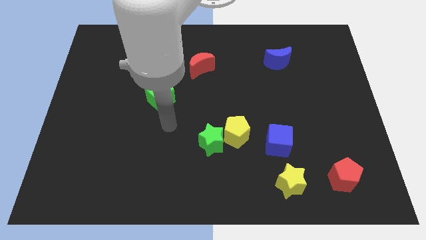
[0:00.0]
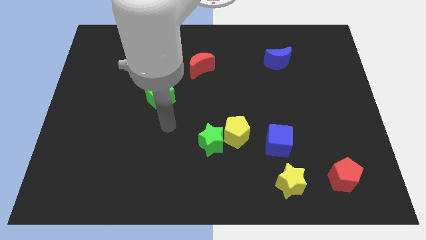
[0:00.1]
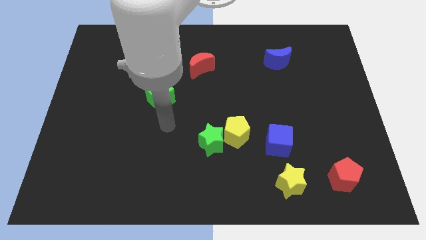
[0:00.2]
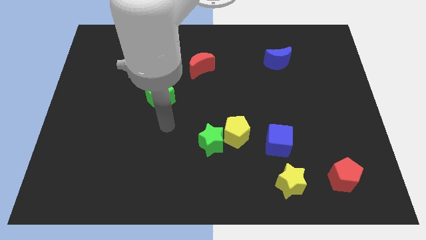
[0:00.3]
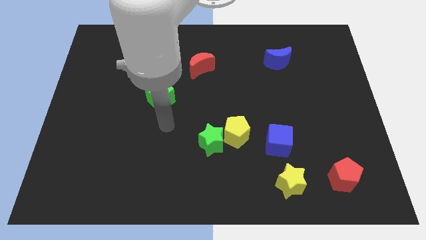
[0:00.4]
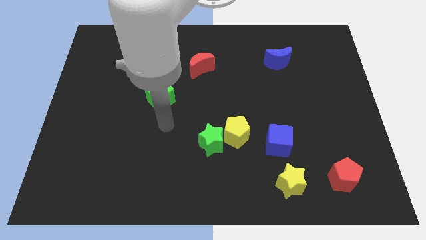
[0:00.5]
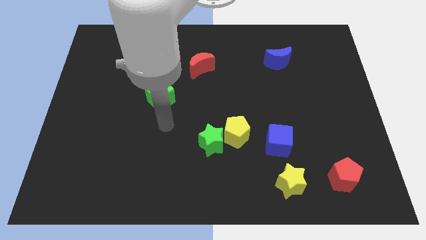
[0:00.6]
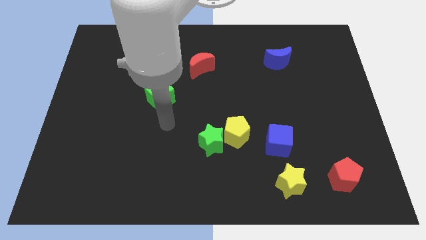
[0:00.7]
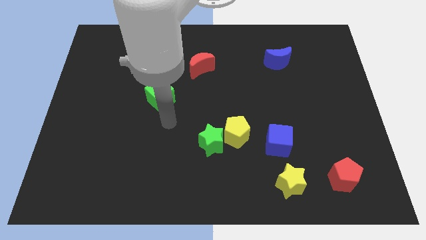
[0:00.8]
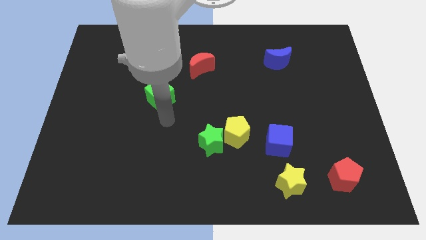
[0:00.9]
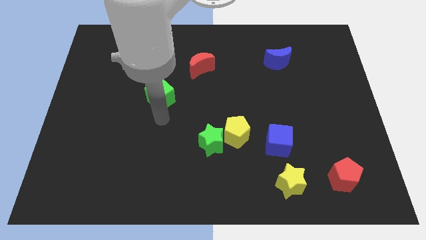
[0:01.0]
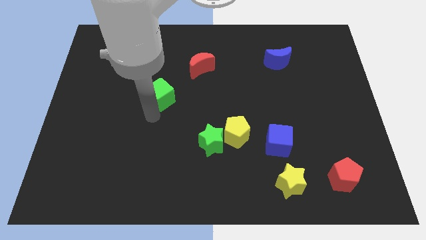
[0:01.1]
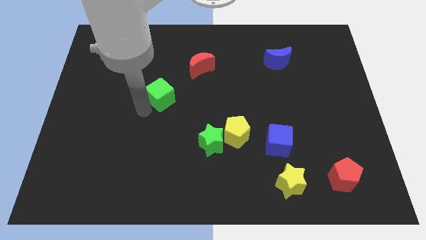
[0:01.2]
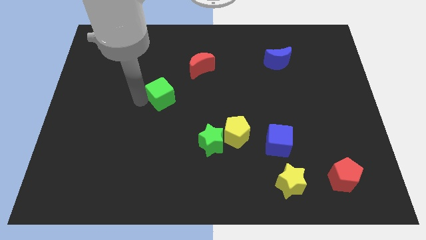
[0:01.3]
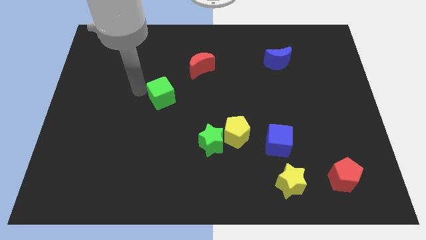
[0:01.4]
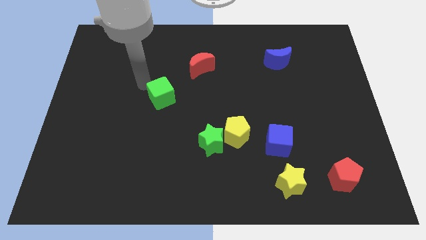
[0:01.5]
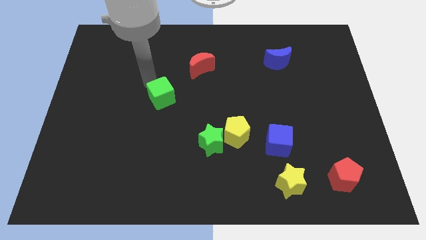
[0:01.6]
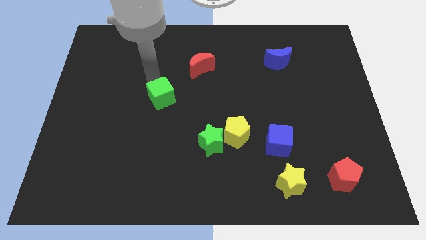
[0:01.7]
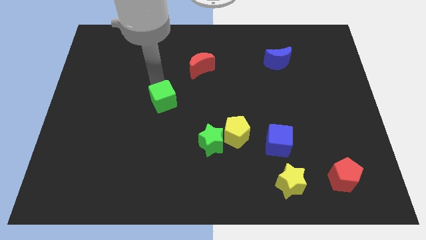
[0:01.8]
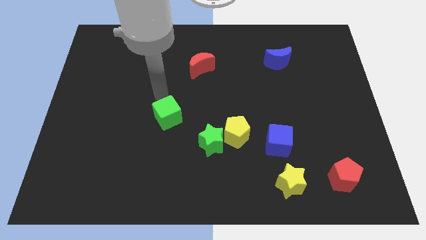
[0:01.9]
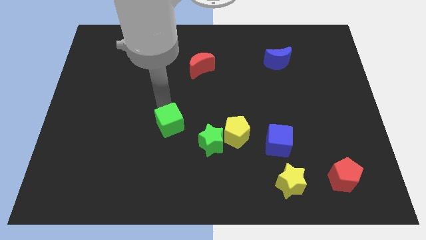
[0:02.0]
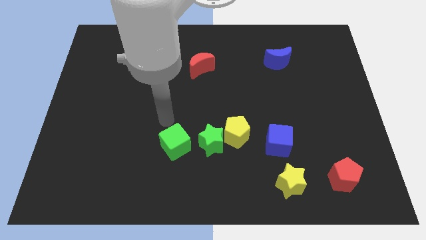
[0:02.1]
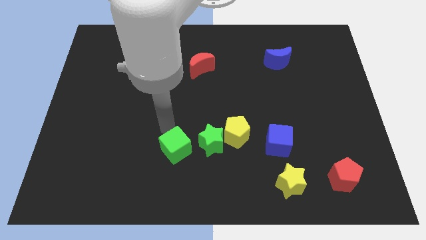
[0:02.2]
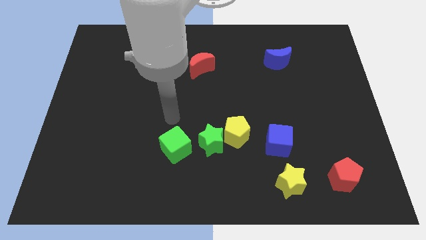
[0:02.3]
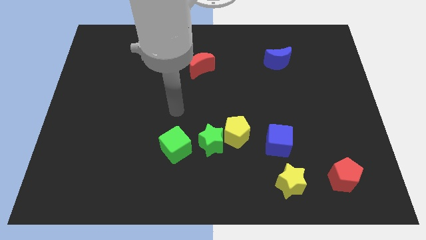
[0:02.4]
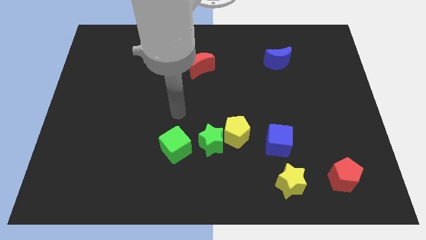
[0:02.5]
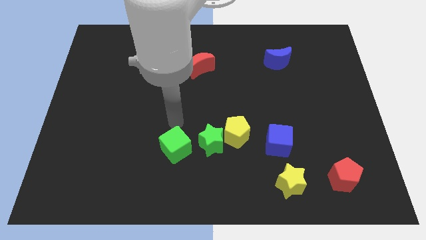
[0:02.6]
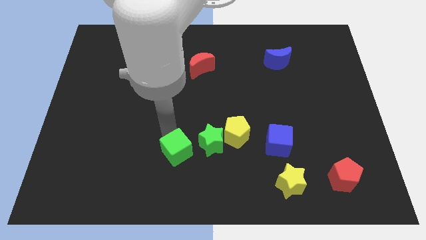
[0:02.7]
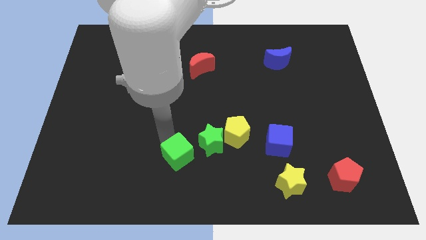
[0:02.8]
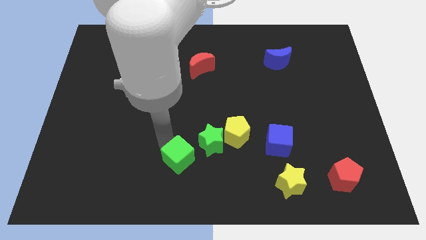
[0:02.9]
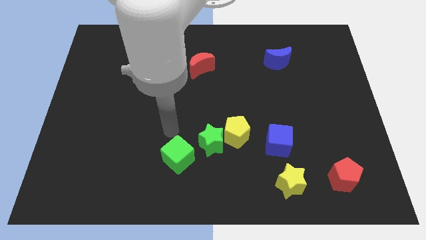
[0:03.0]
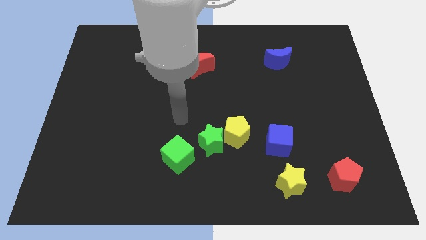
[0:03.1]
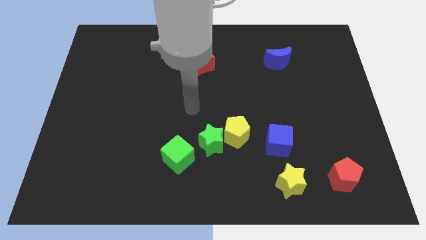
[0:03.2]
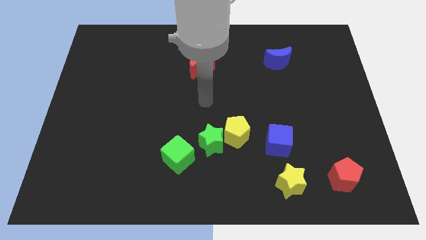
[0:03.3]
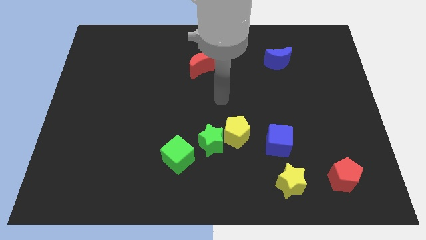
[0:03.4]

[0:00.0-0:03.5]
move the green cube towards the bottom right

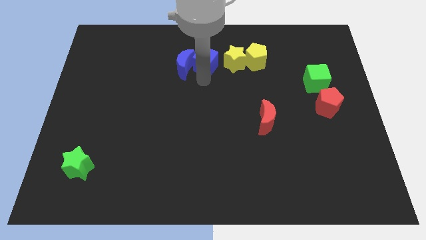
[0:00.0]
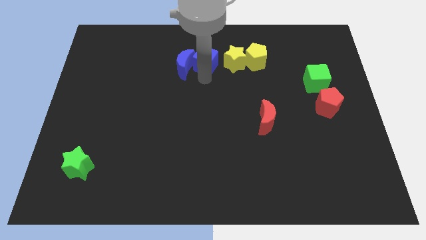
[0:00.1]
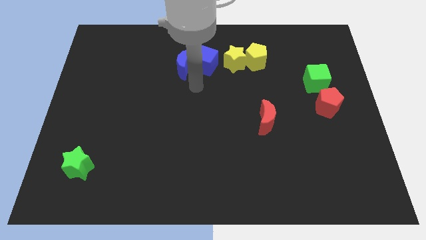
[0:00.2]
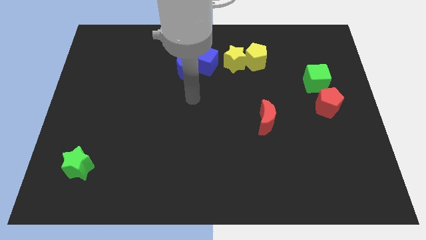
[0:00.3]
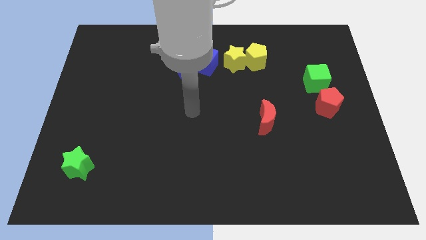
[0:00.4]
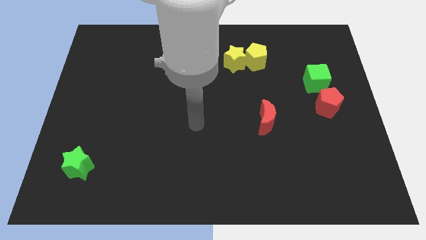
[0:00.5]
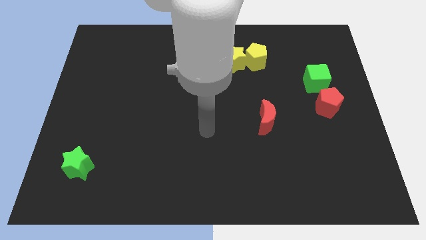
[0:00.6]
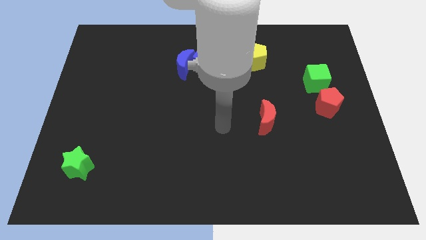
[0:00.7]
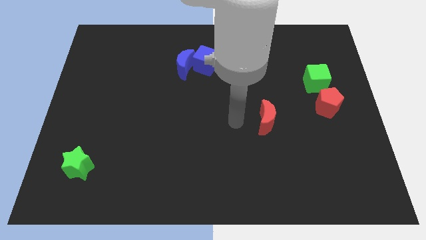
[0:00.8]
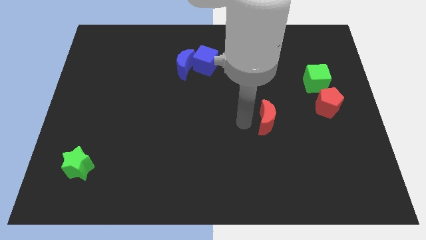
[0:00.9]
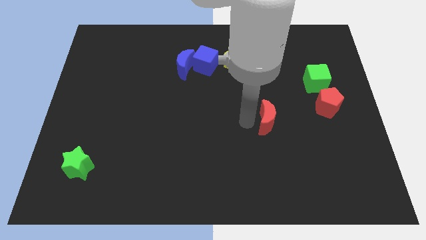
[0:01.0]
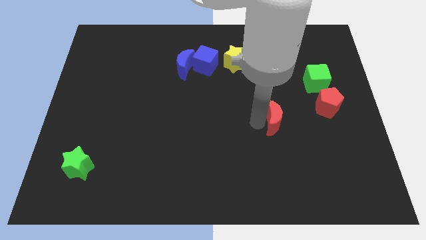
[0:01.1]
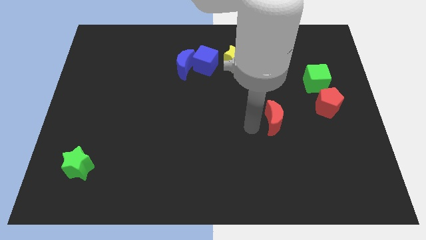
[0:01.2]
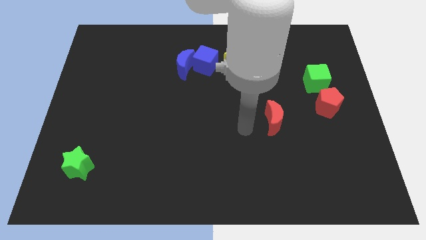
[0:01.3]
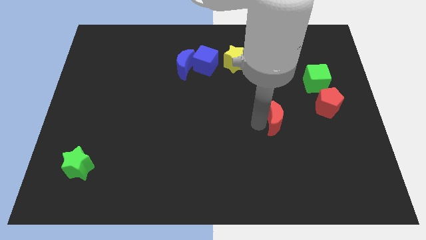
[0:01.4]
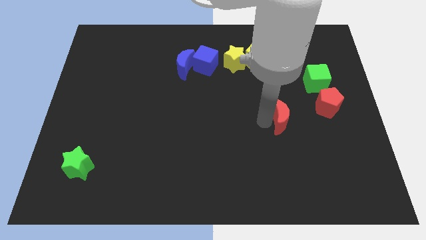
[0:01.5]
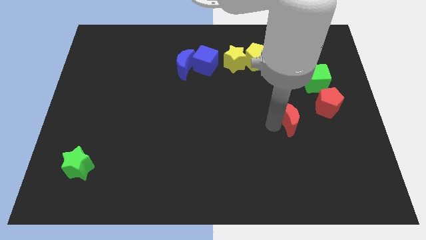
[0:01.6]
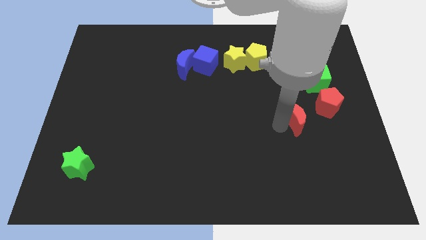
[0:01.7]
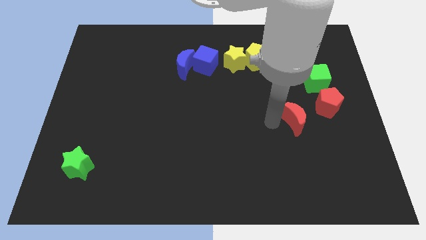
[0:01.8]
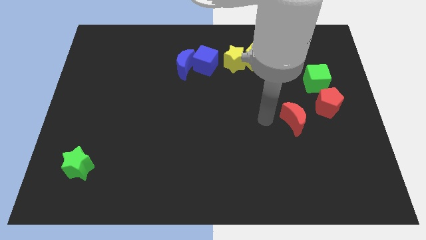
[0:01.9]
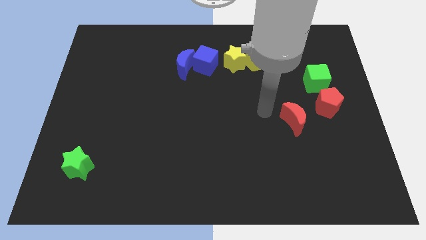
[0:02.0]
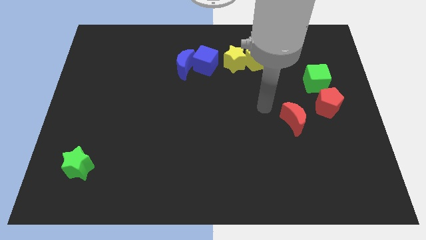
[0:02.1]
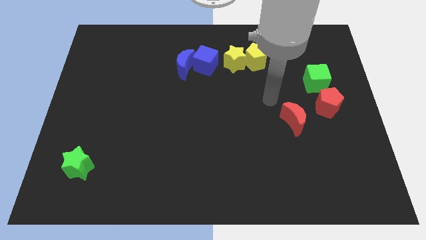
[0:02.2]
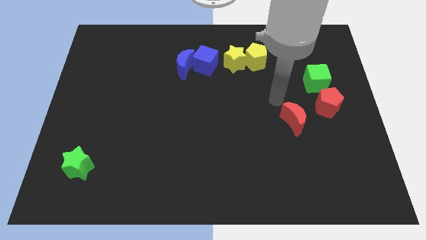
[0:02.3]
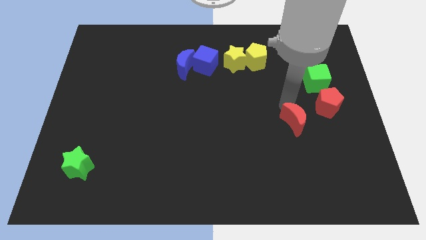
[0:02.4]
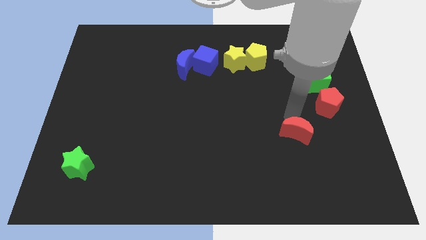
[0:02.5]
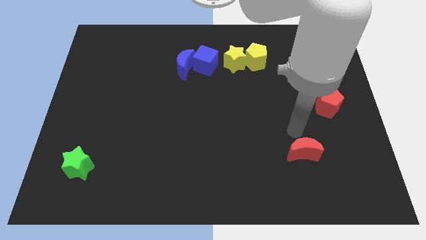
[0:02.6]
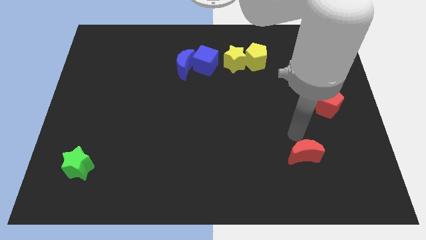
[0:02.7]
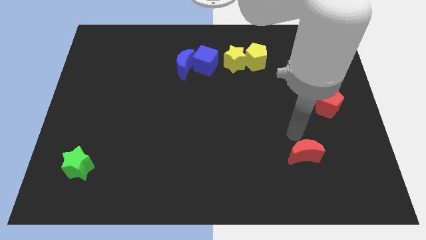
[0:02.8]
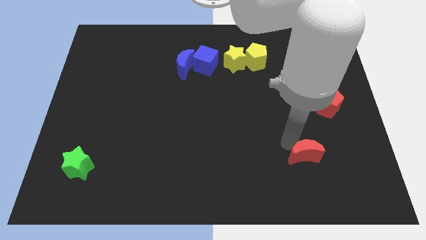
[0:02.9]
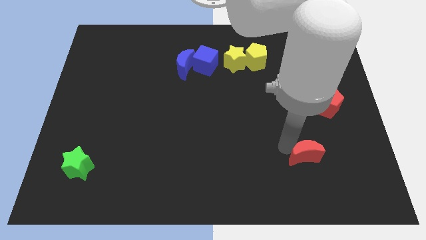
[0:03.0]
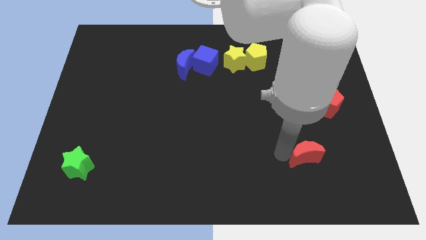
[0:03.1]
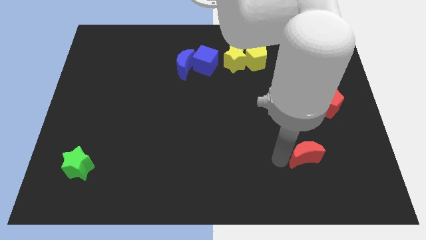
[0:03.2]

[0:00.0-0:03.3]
push the red moon towards the bottom of the board

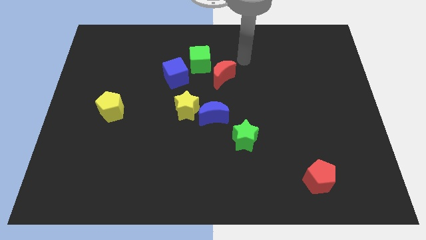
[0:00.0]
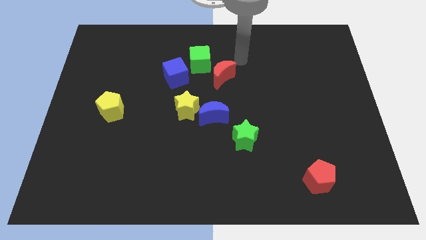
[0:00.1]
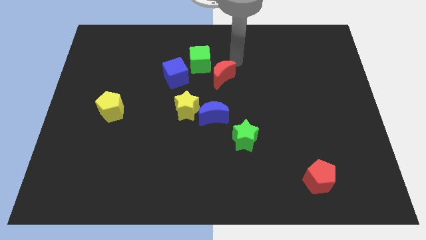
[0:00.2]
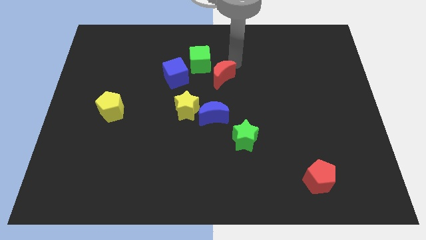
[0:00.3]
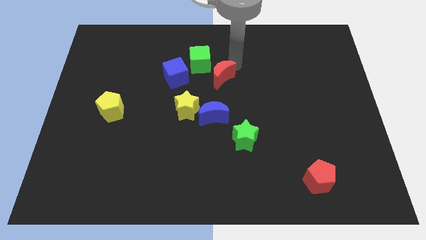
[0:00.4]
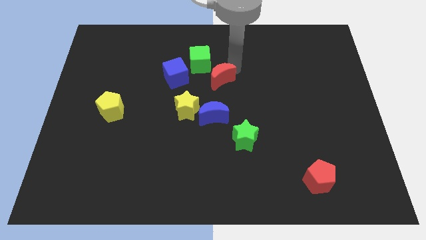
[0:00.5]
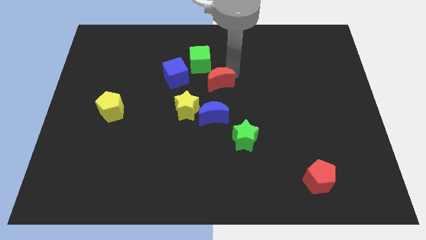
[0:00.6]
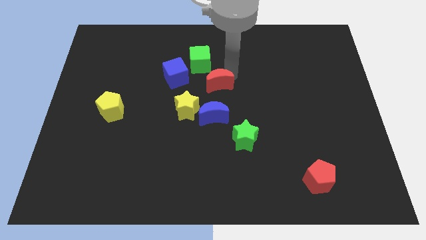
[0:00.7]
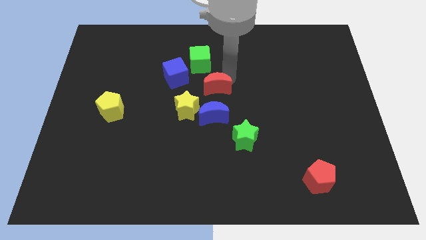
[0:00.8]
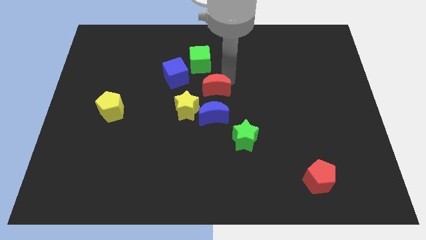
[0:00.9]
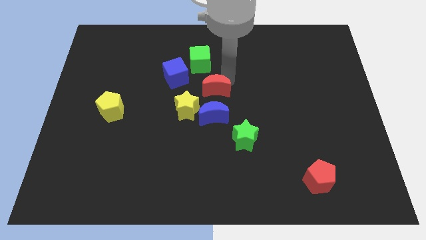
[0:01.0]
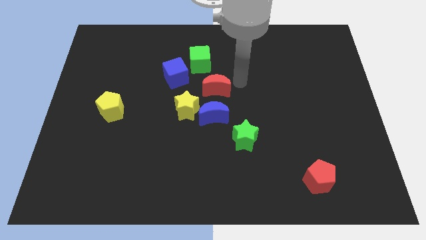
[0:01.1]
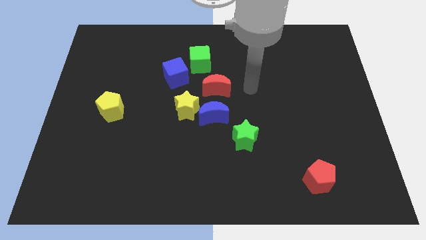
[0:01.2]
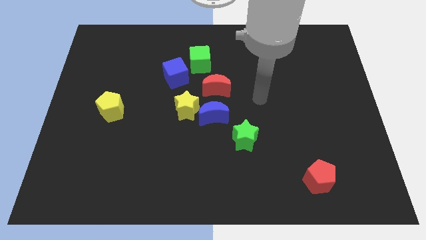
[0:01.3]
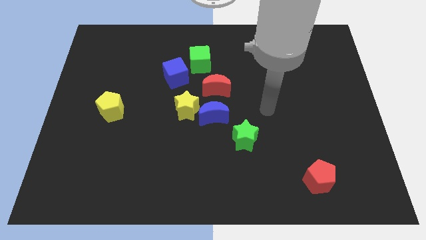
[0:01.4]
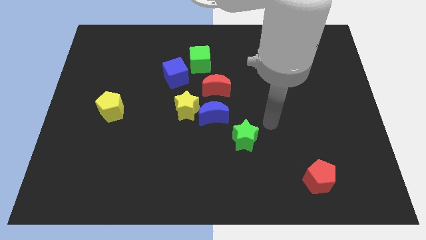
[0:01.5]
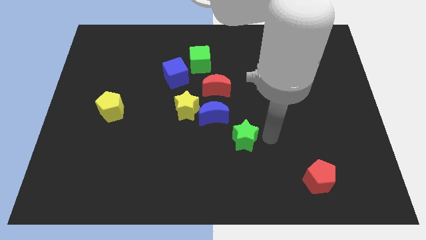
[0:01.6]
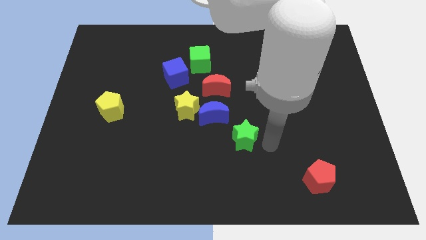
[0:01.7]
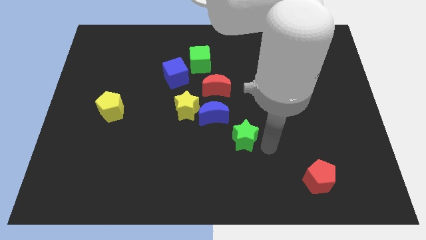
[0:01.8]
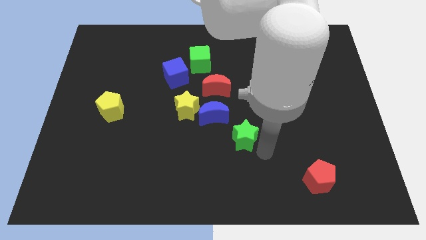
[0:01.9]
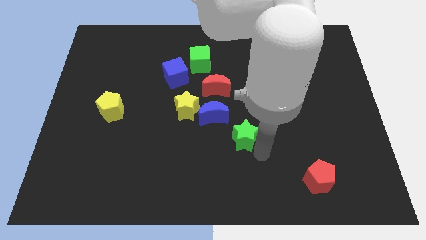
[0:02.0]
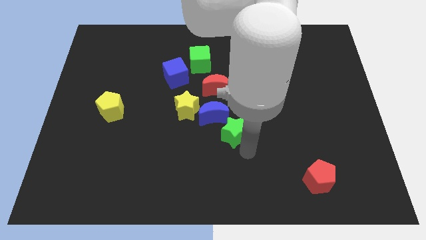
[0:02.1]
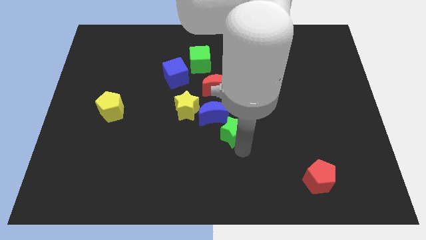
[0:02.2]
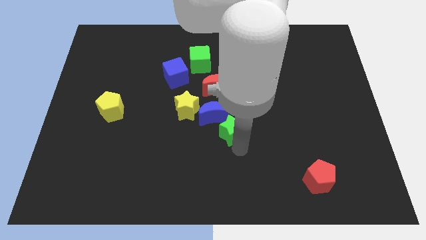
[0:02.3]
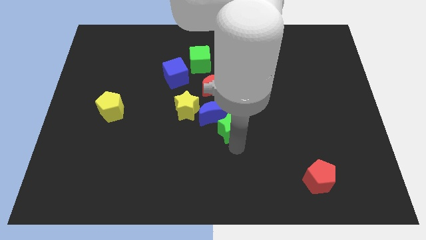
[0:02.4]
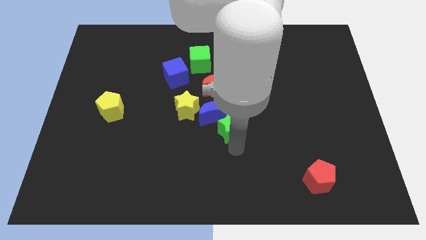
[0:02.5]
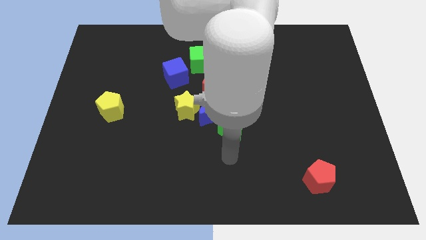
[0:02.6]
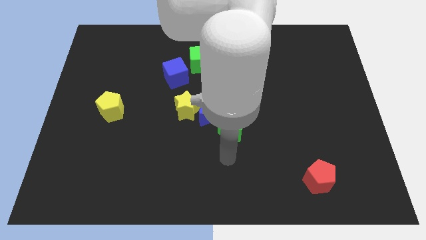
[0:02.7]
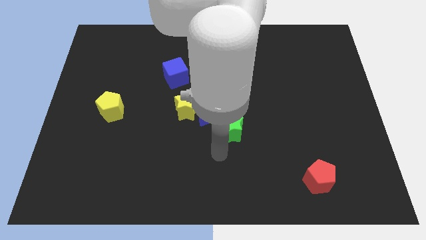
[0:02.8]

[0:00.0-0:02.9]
move the green star close to the blue moon
